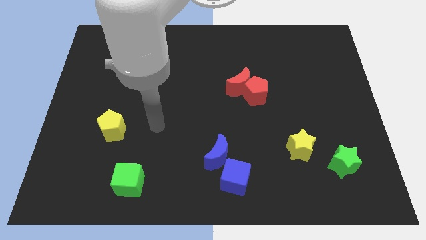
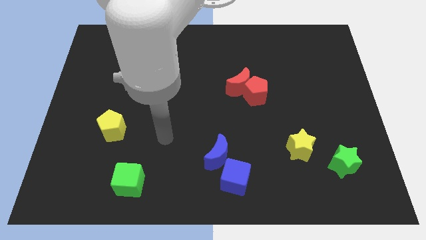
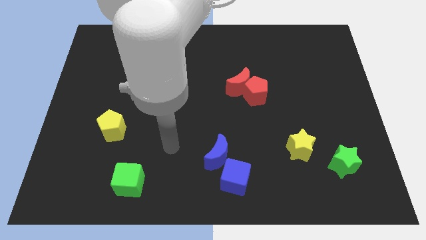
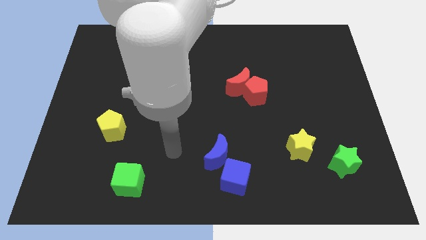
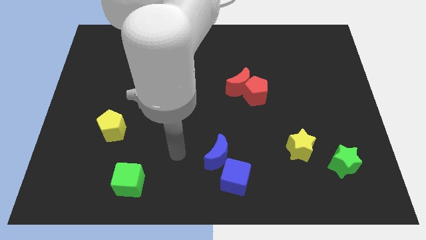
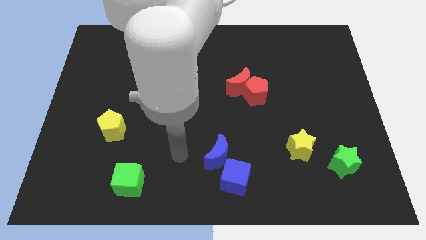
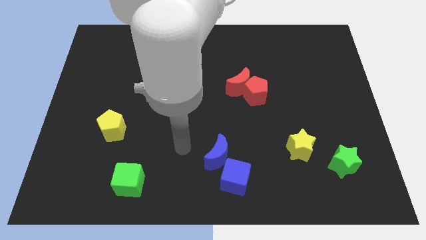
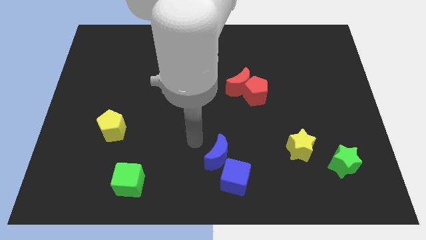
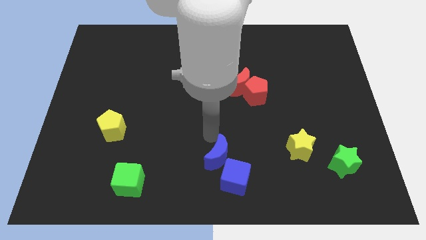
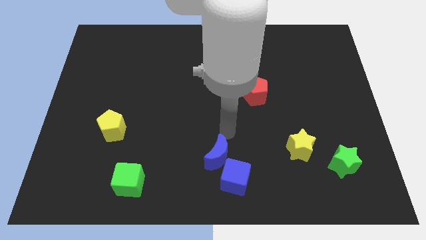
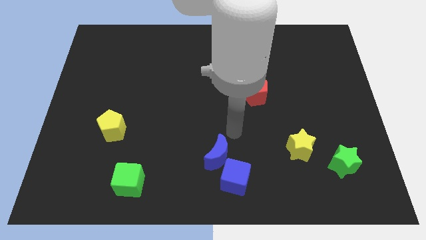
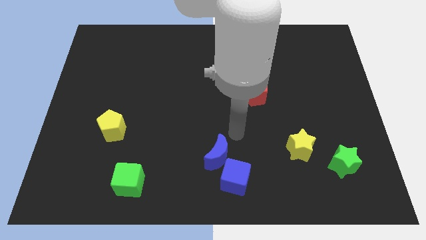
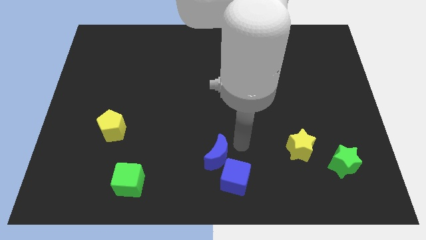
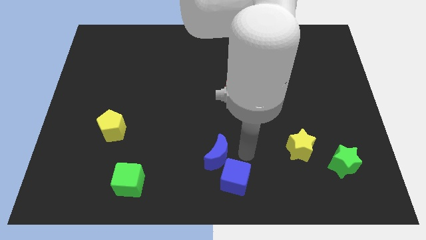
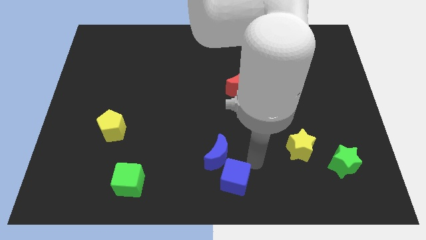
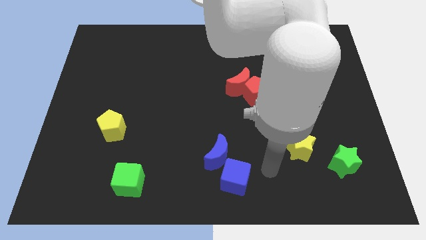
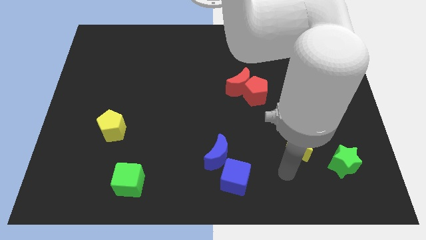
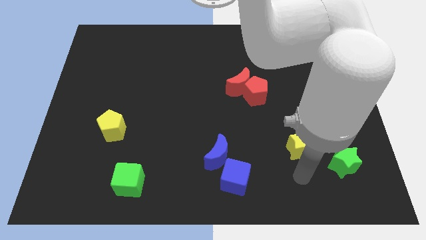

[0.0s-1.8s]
point your arm at the bottom of the yellow star

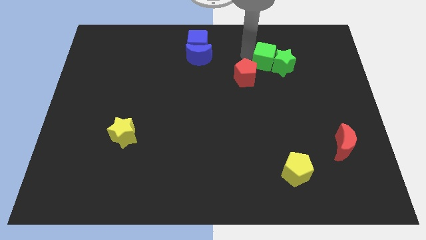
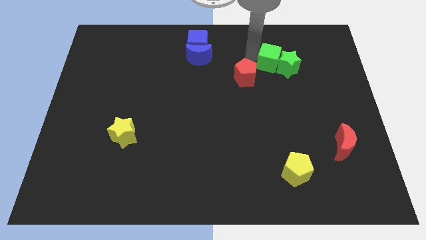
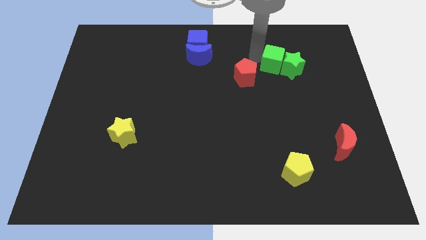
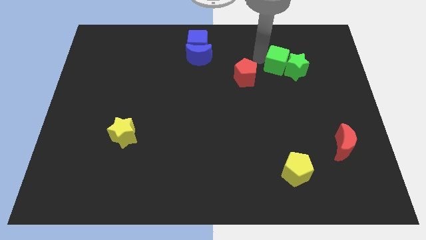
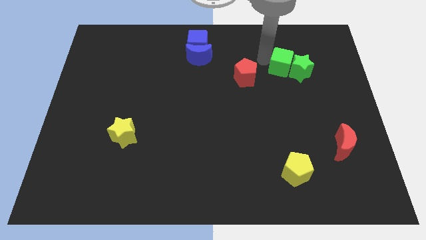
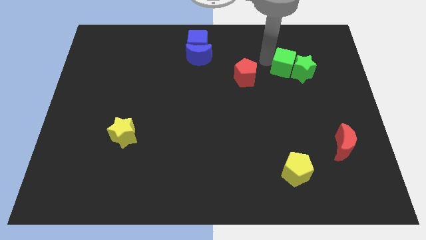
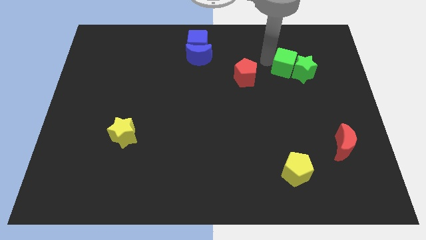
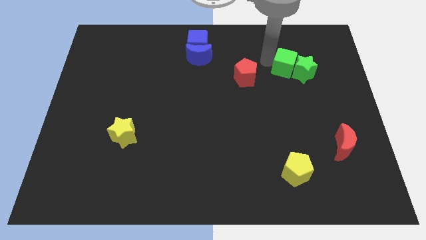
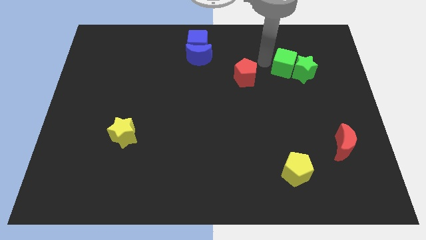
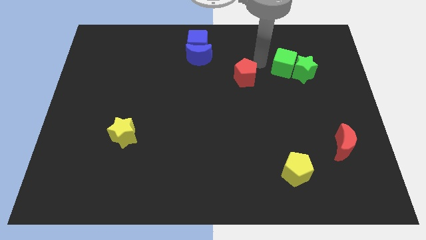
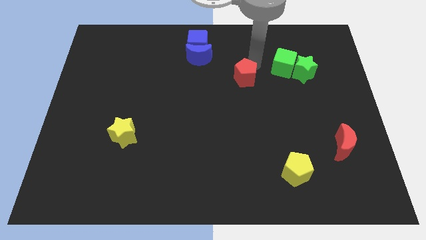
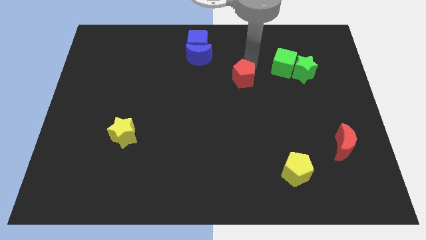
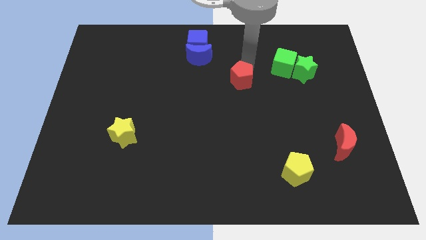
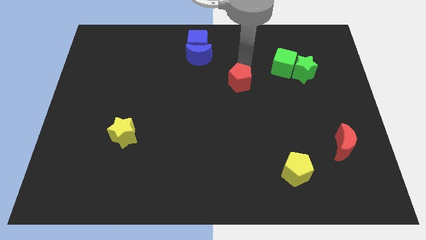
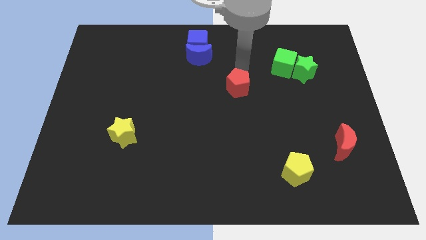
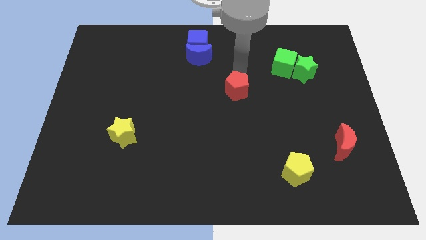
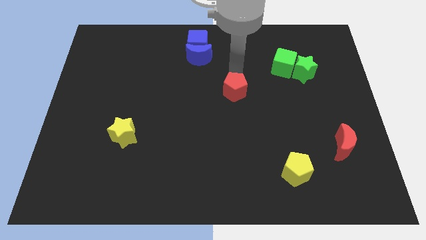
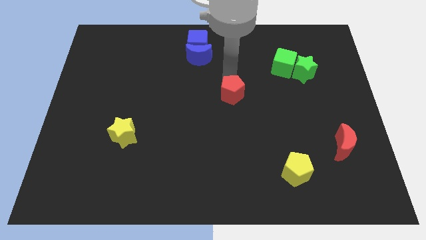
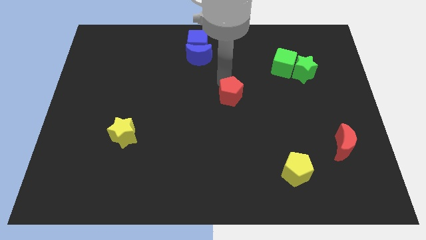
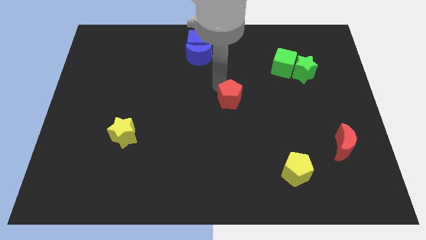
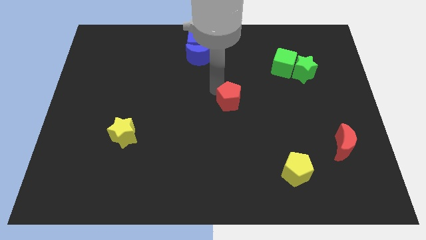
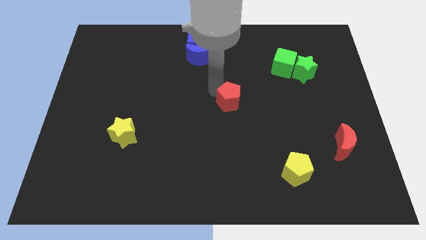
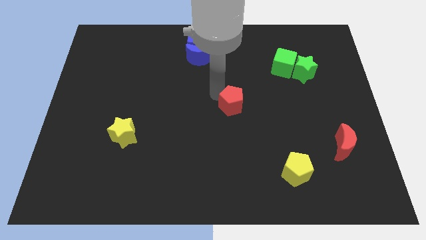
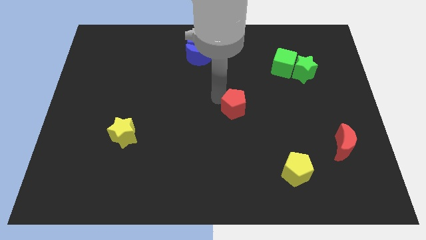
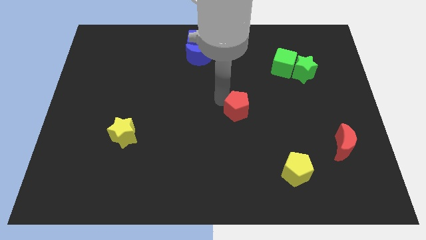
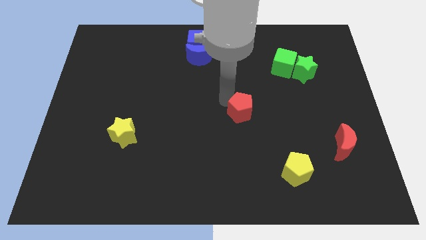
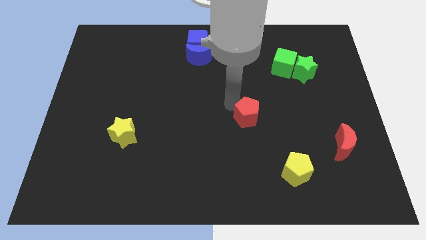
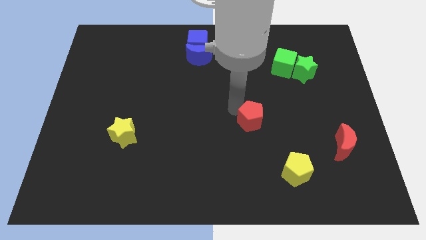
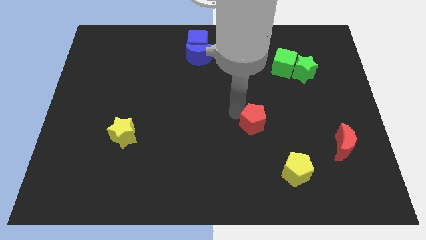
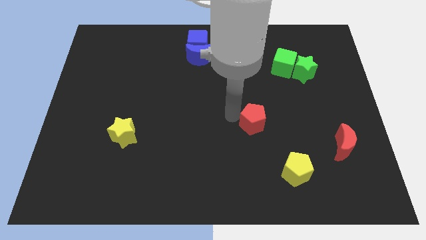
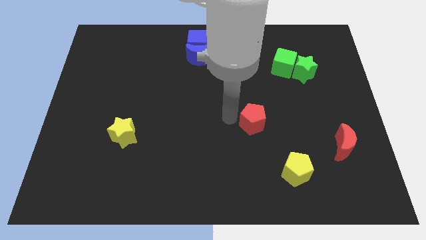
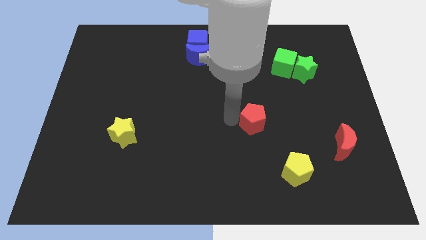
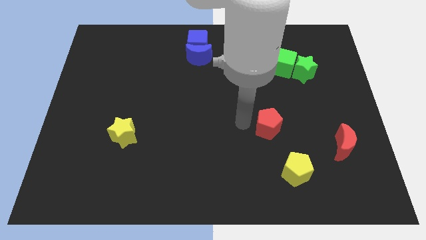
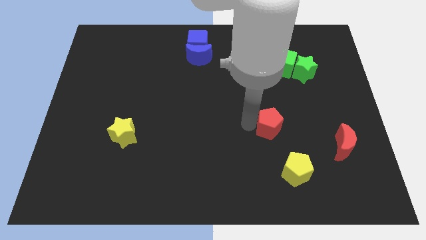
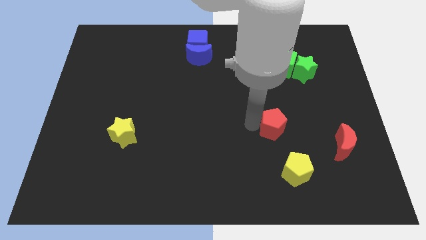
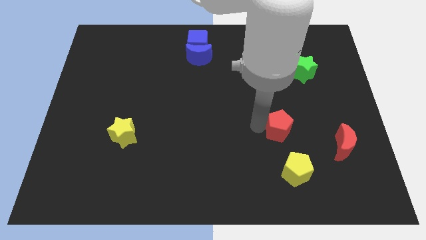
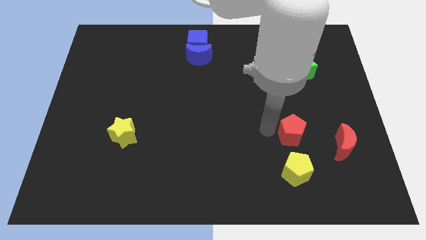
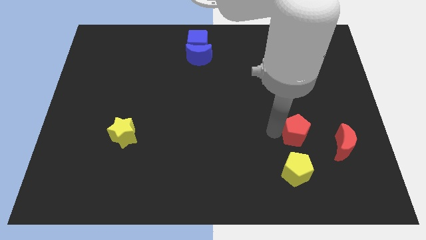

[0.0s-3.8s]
separate the red pentagon from green cube

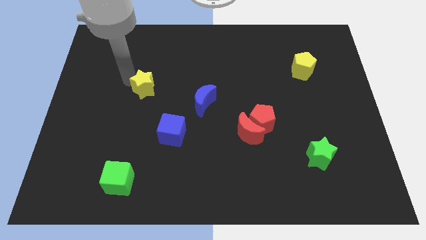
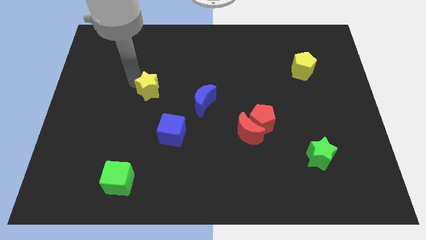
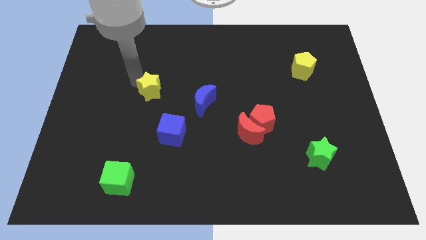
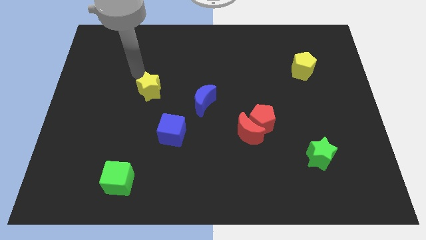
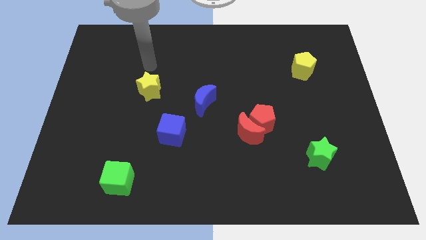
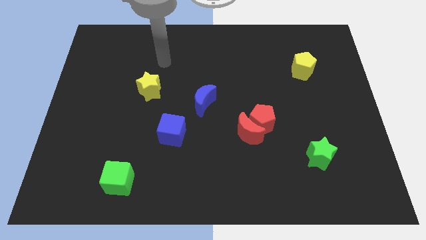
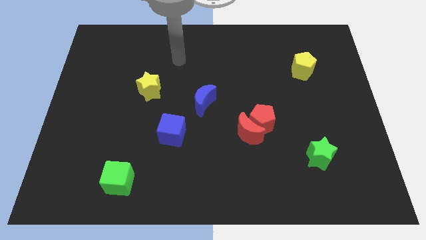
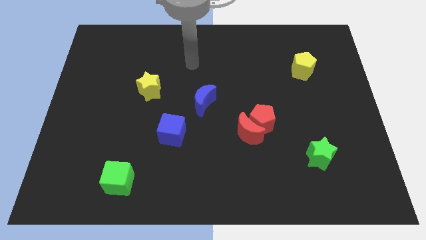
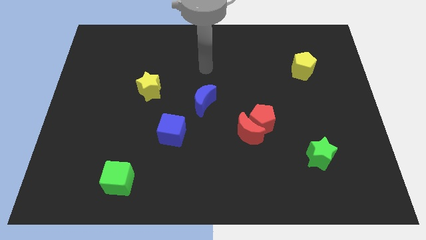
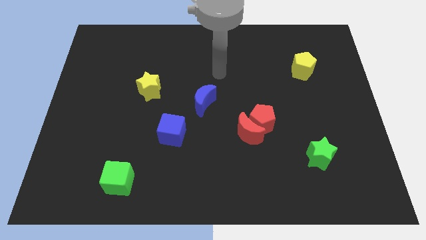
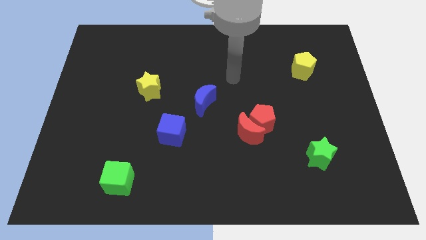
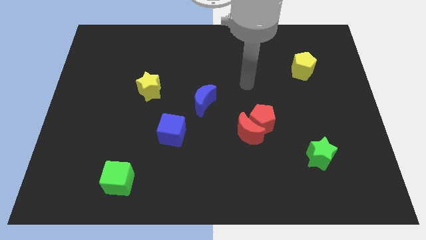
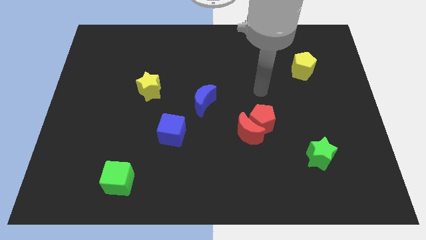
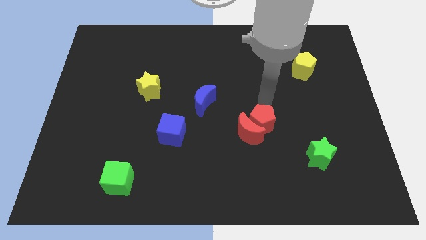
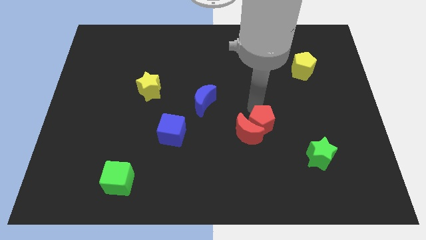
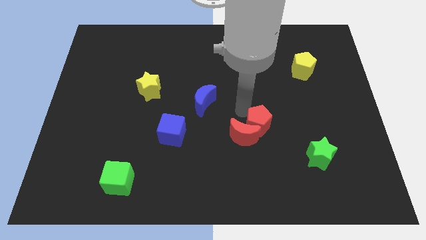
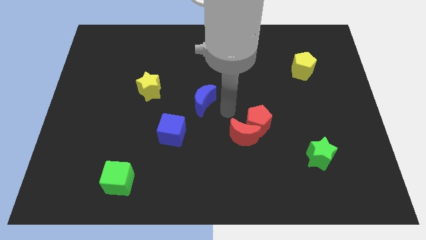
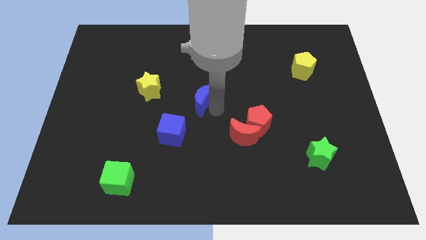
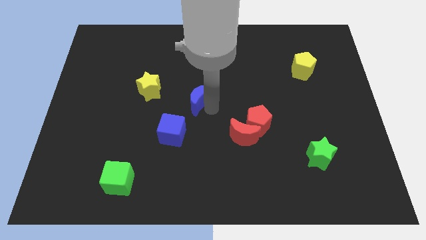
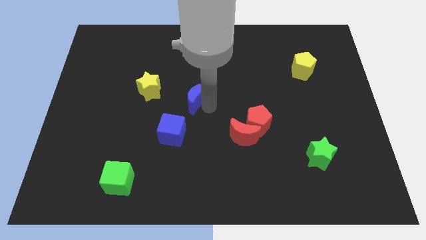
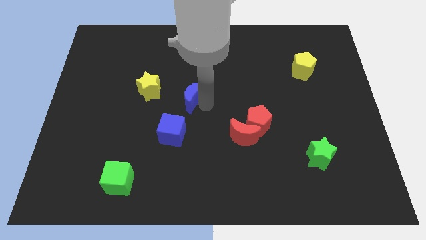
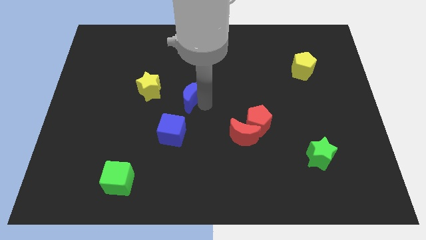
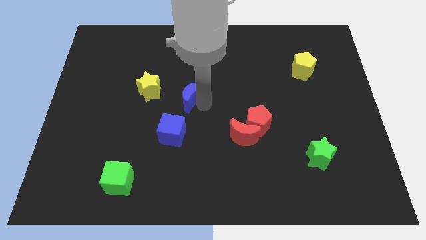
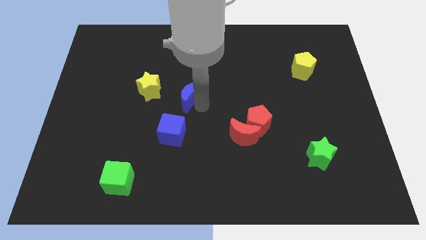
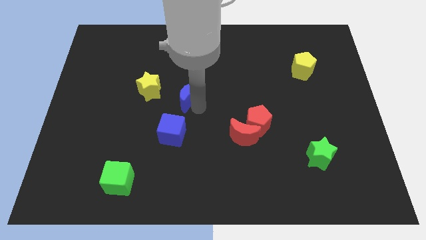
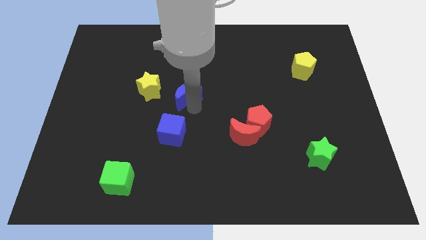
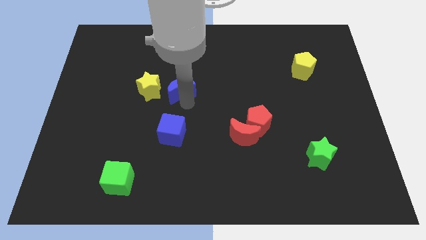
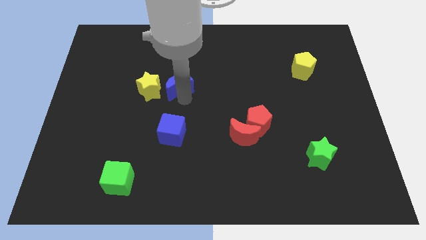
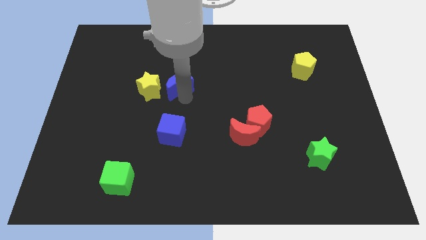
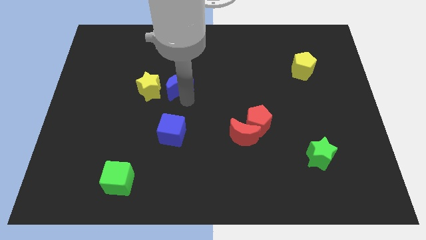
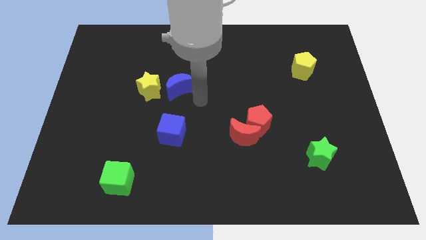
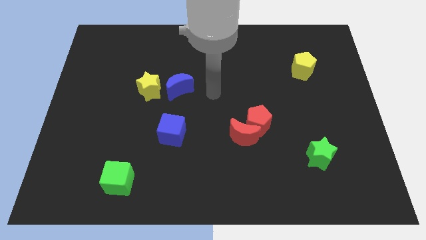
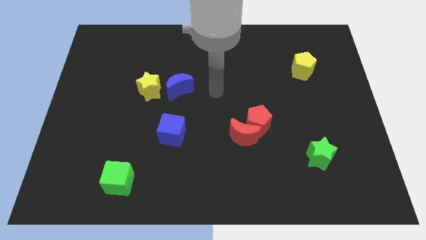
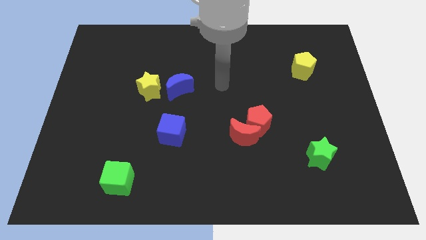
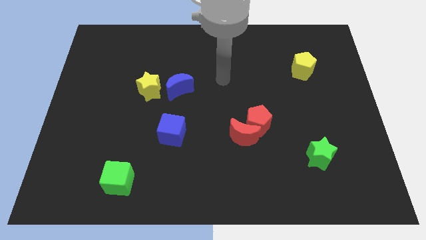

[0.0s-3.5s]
move the blue crescent close to the yellow star
